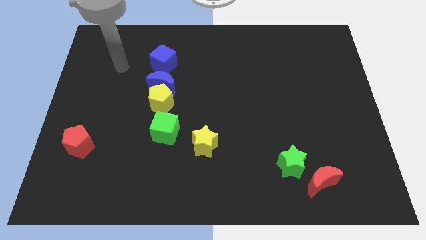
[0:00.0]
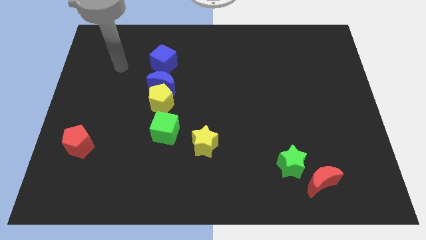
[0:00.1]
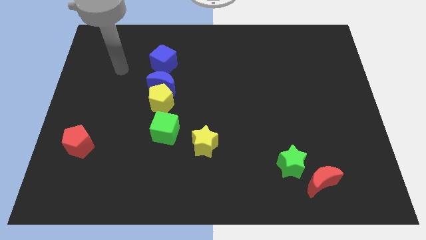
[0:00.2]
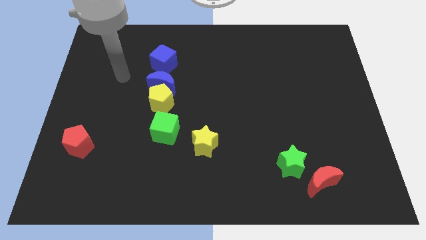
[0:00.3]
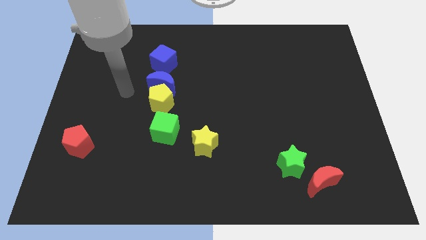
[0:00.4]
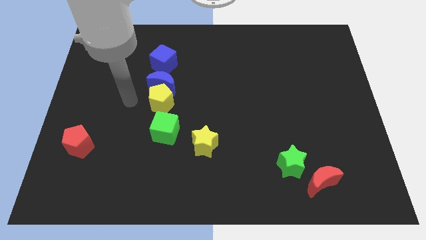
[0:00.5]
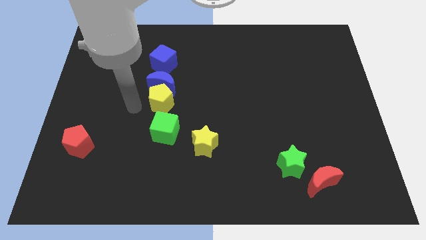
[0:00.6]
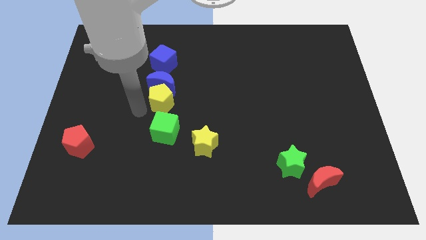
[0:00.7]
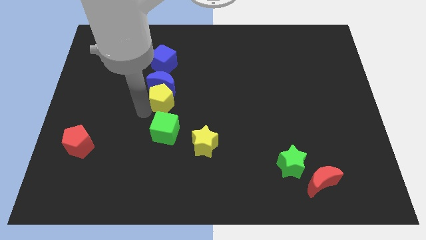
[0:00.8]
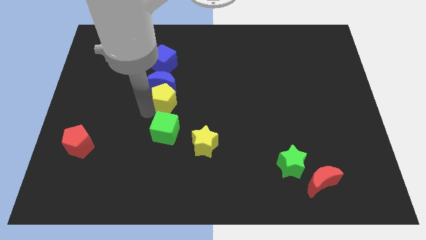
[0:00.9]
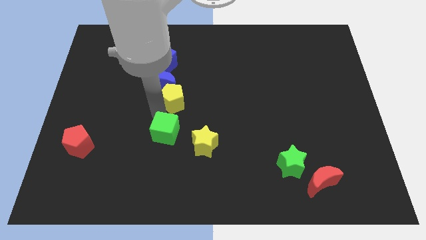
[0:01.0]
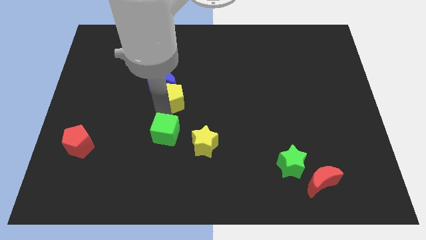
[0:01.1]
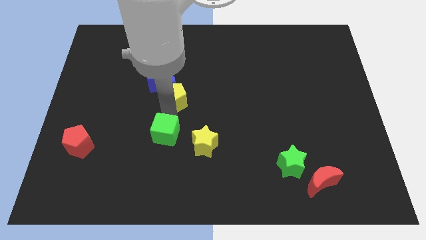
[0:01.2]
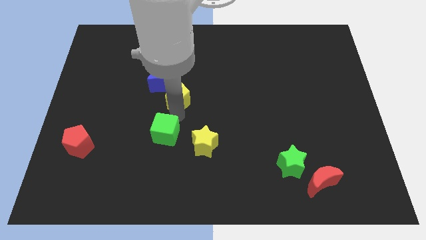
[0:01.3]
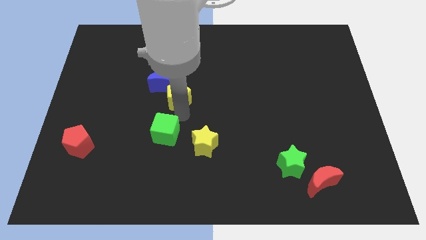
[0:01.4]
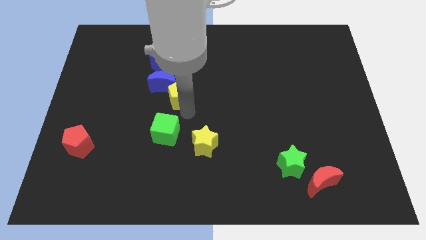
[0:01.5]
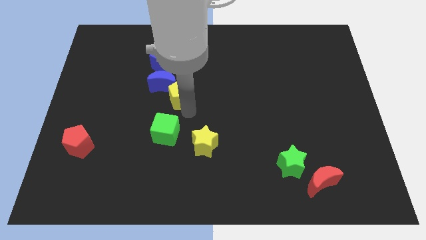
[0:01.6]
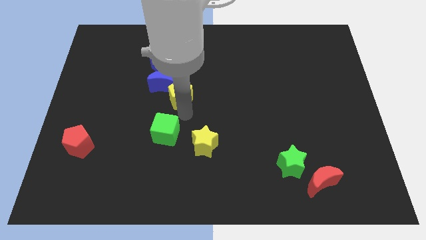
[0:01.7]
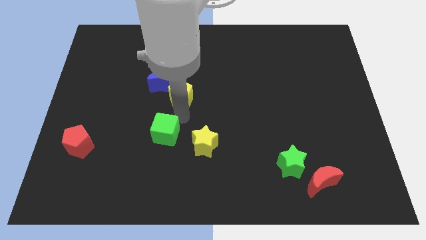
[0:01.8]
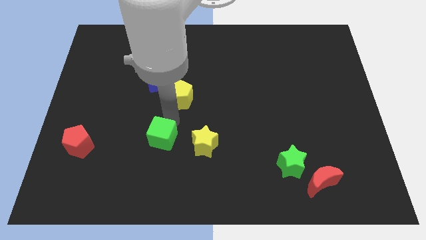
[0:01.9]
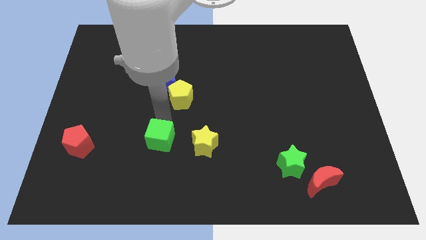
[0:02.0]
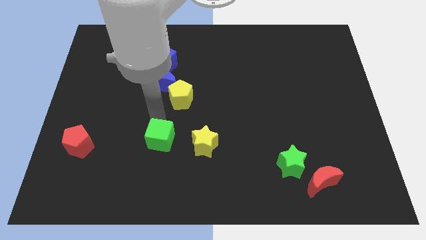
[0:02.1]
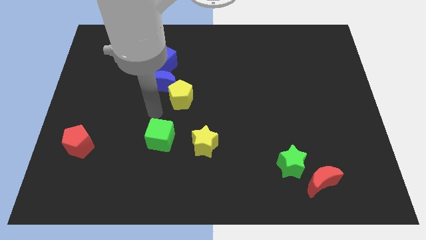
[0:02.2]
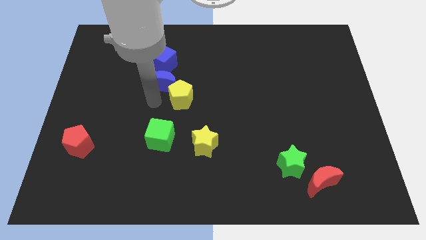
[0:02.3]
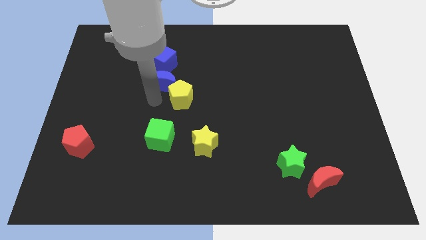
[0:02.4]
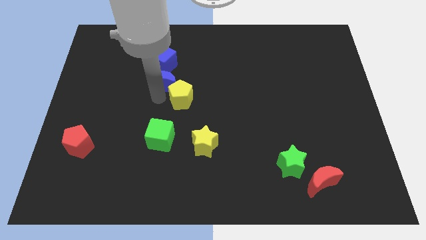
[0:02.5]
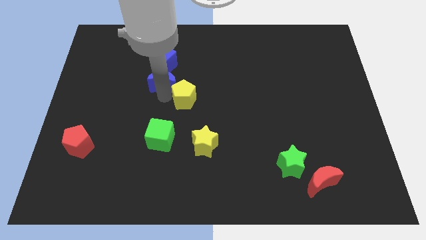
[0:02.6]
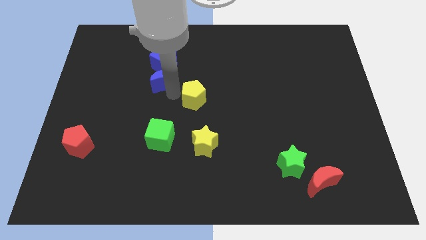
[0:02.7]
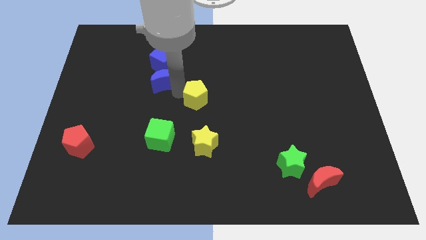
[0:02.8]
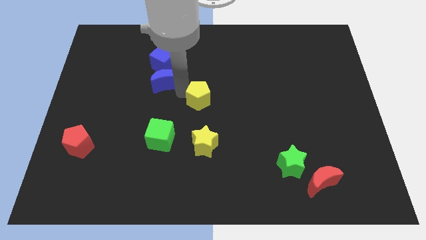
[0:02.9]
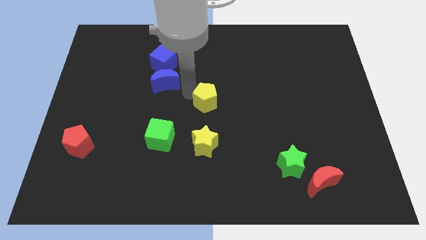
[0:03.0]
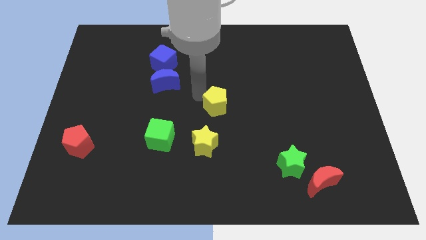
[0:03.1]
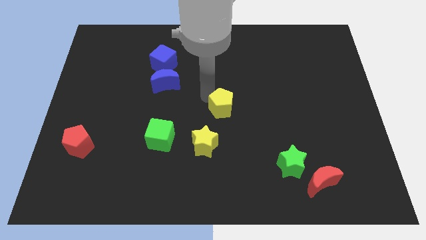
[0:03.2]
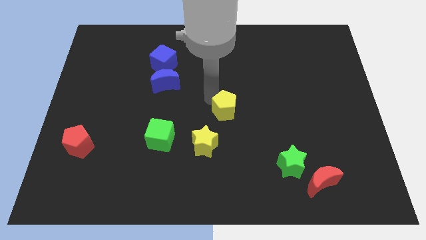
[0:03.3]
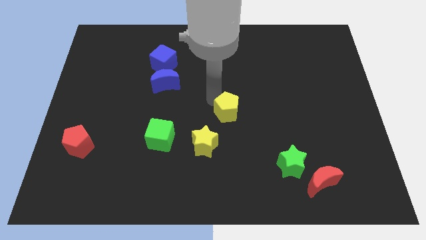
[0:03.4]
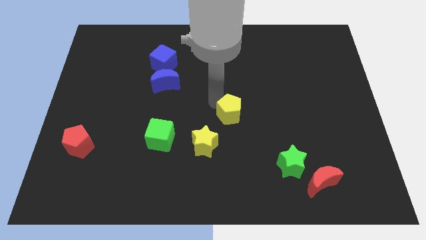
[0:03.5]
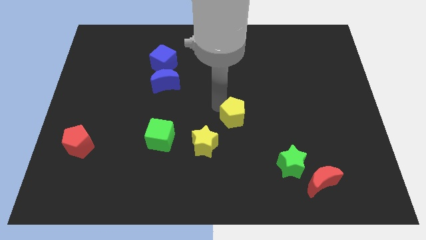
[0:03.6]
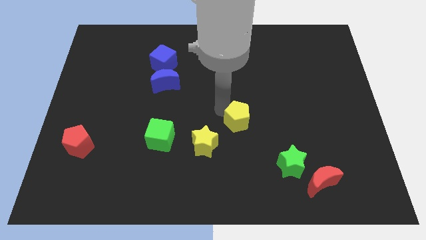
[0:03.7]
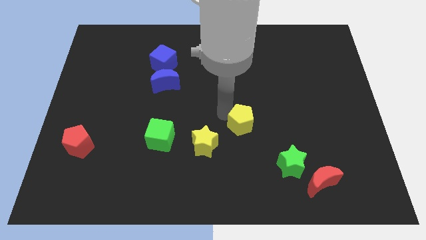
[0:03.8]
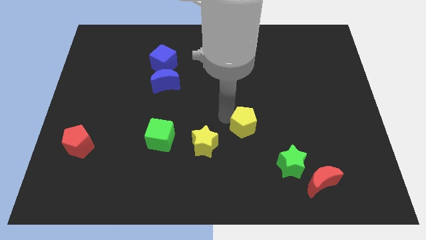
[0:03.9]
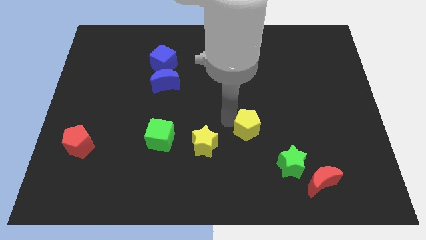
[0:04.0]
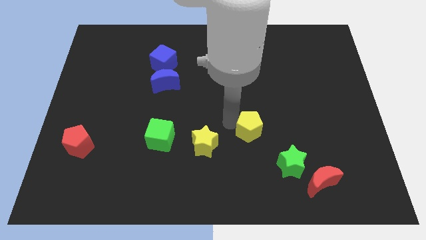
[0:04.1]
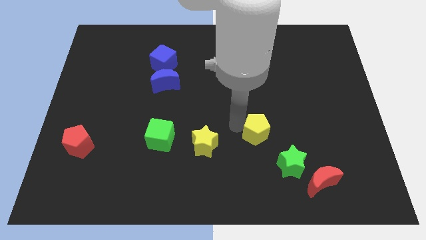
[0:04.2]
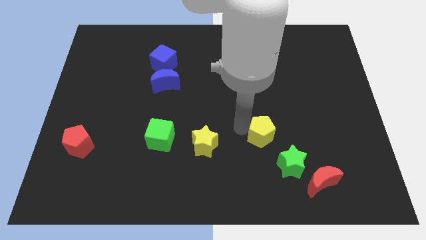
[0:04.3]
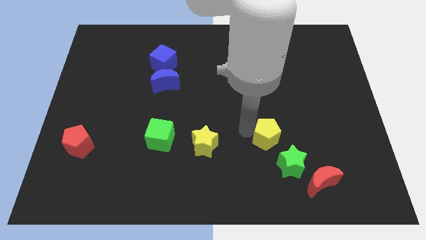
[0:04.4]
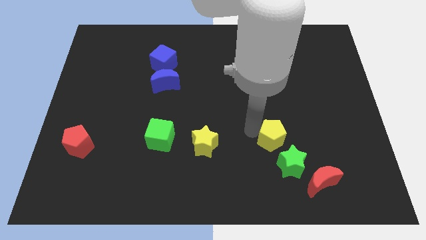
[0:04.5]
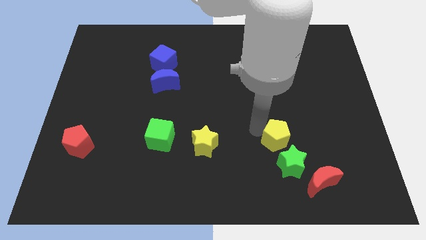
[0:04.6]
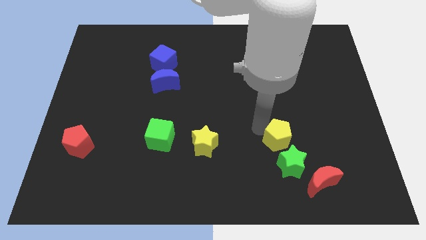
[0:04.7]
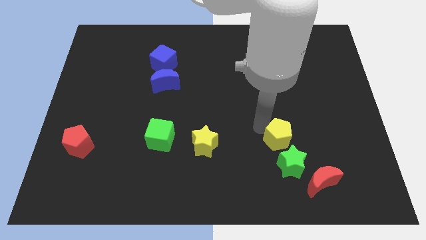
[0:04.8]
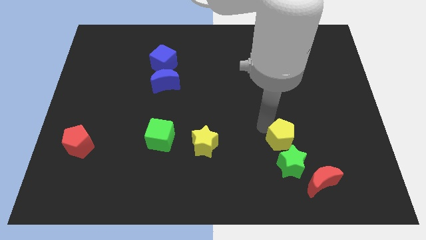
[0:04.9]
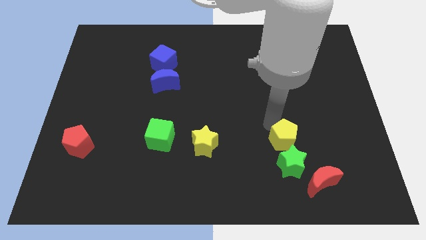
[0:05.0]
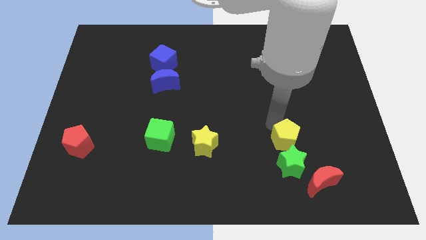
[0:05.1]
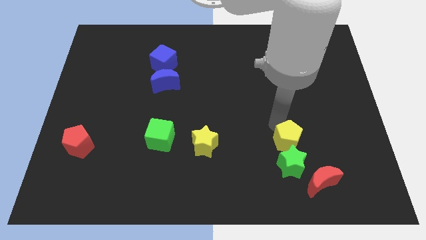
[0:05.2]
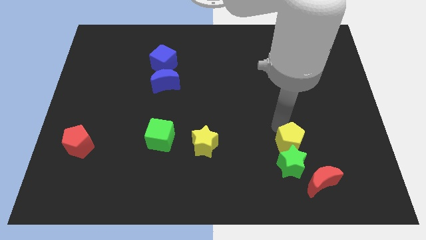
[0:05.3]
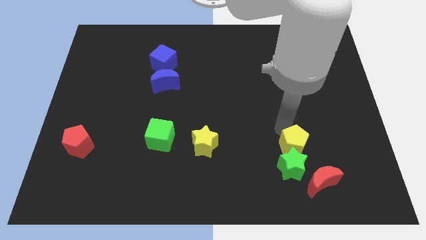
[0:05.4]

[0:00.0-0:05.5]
slide the yellow pentagon towards the green star

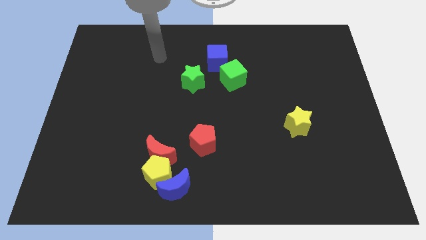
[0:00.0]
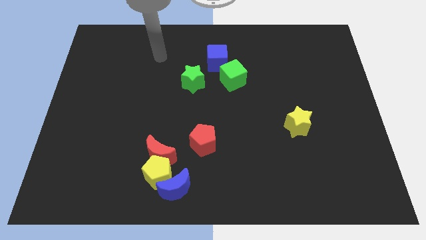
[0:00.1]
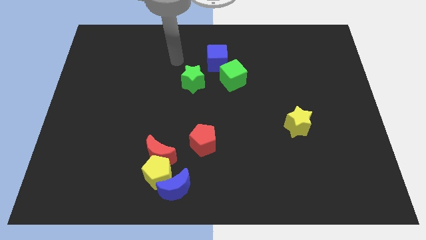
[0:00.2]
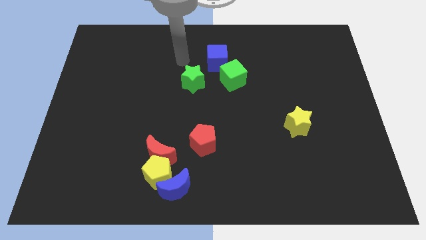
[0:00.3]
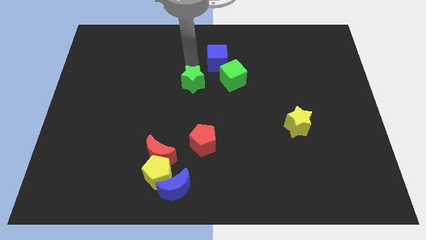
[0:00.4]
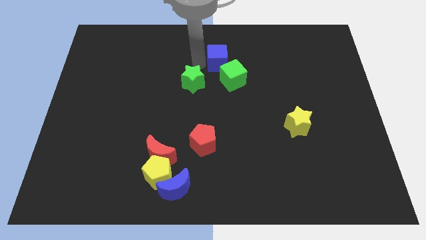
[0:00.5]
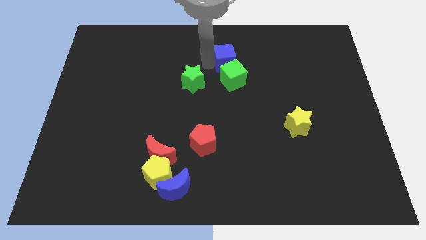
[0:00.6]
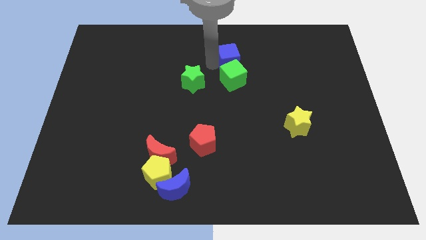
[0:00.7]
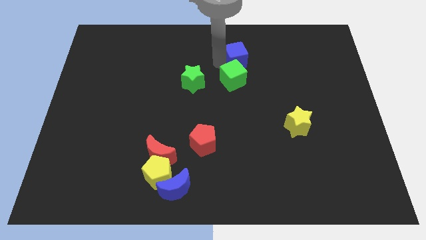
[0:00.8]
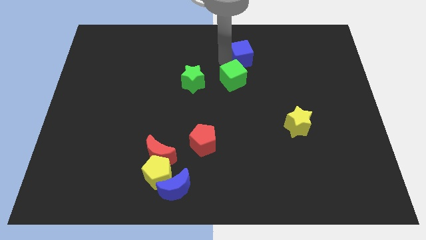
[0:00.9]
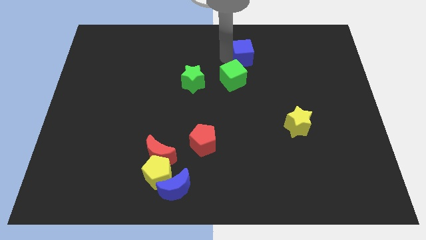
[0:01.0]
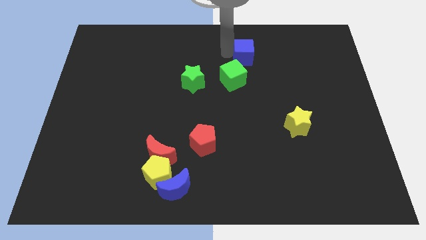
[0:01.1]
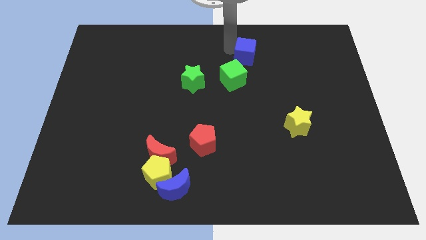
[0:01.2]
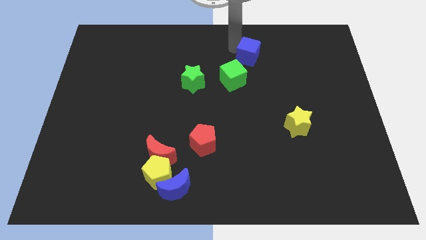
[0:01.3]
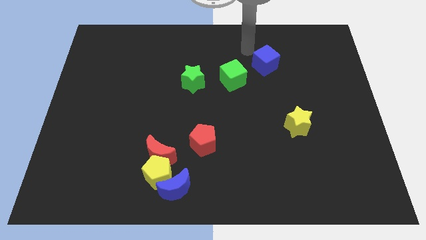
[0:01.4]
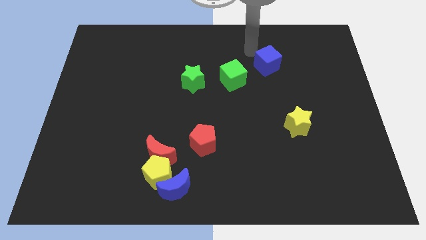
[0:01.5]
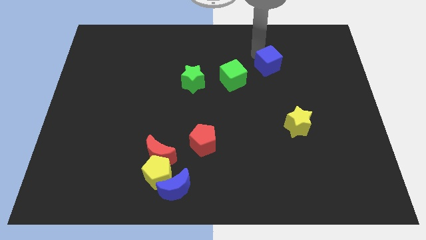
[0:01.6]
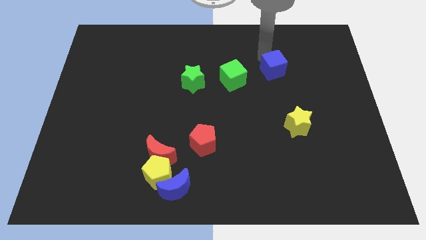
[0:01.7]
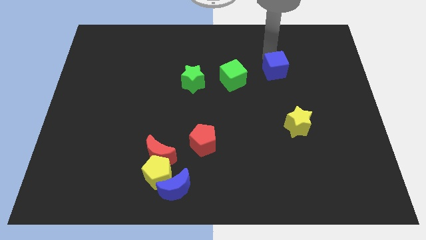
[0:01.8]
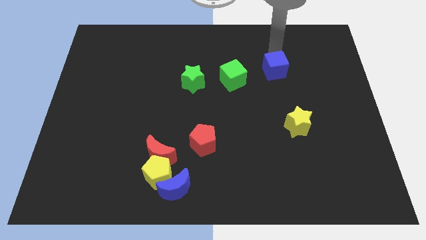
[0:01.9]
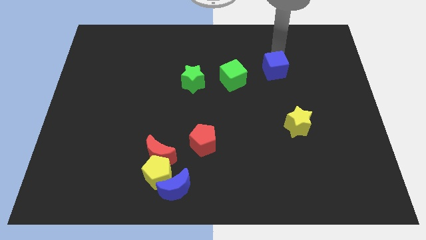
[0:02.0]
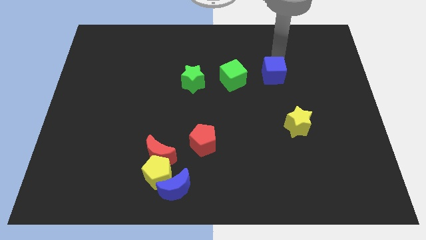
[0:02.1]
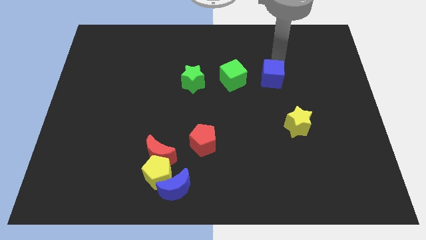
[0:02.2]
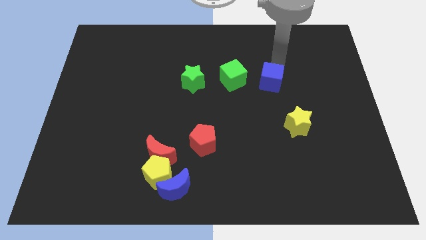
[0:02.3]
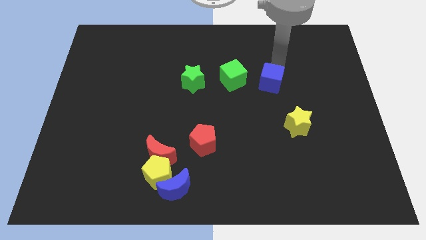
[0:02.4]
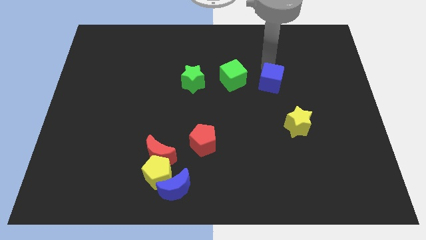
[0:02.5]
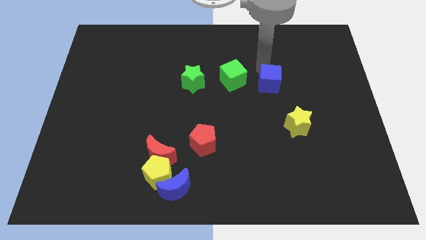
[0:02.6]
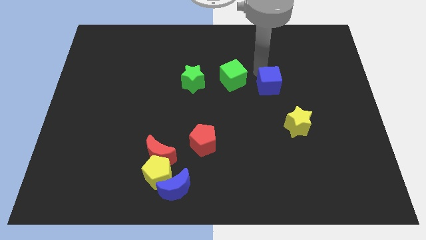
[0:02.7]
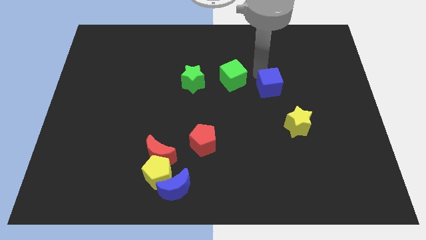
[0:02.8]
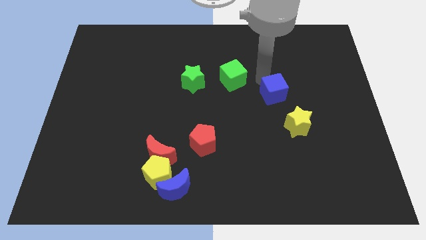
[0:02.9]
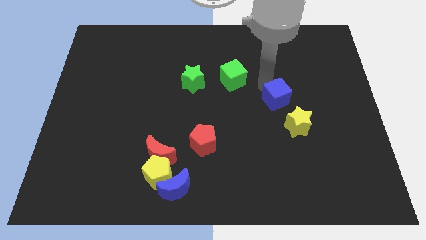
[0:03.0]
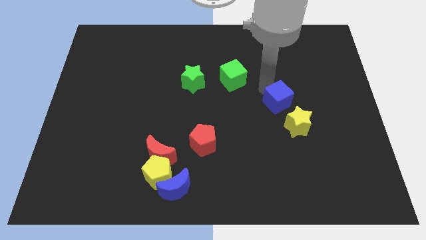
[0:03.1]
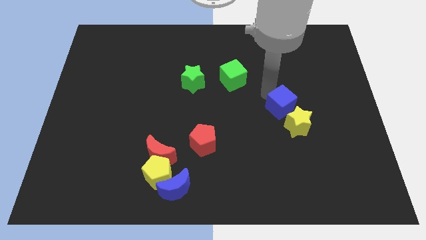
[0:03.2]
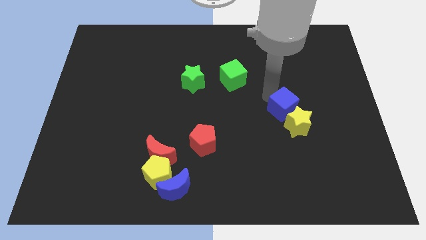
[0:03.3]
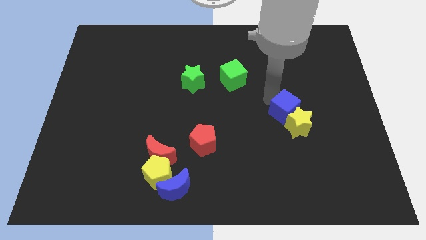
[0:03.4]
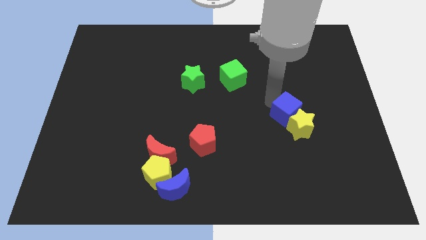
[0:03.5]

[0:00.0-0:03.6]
move the blue cube towards the yellow star
